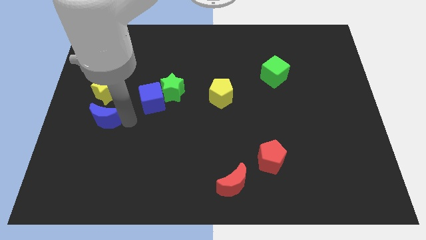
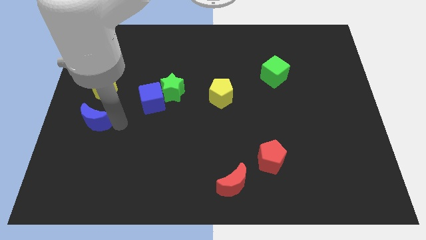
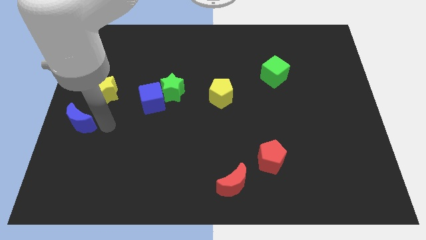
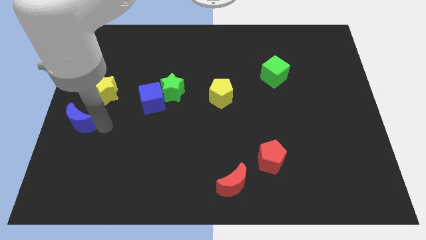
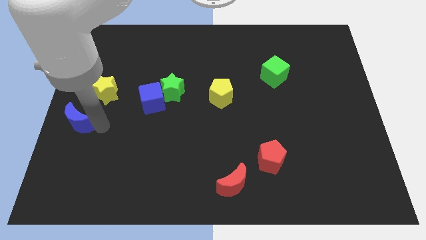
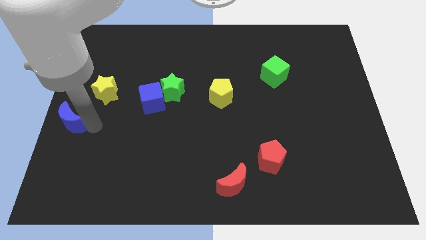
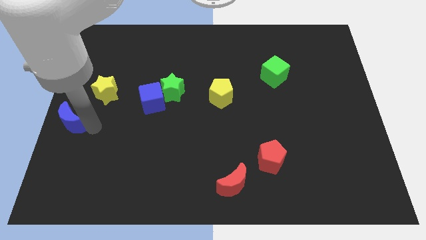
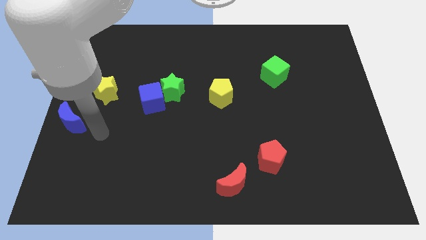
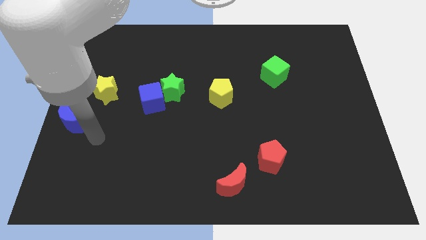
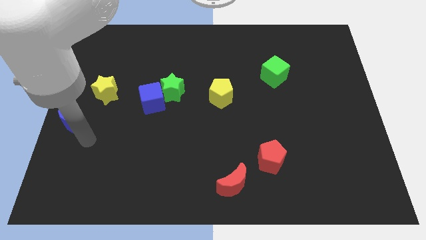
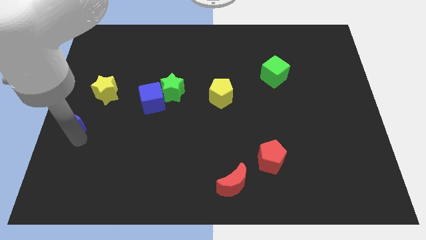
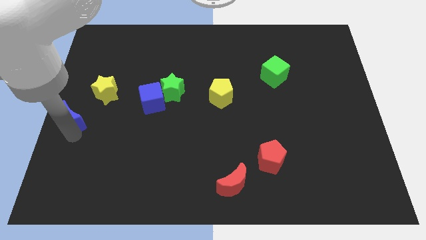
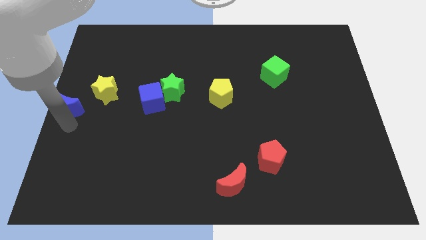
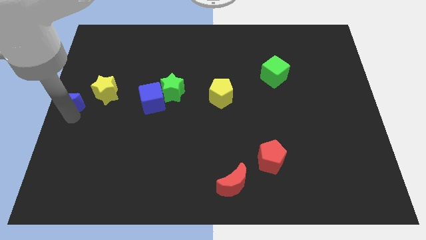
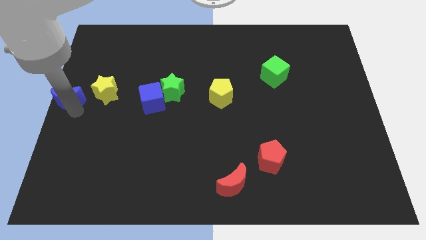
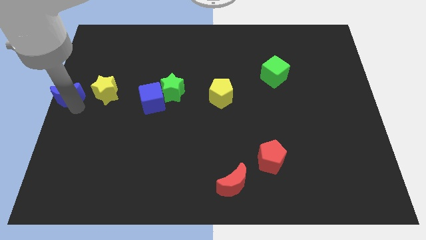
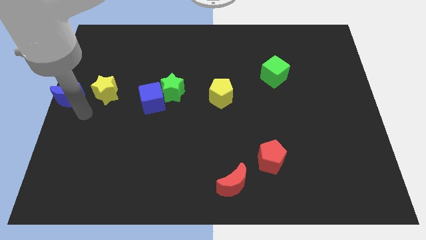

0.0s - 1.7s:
place the blue moon to the left side of the yellow star

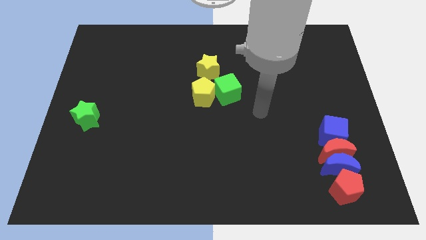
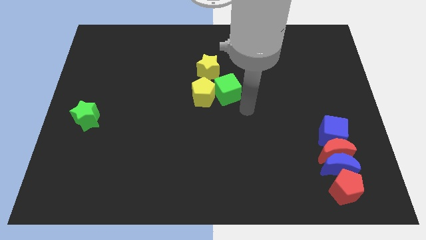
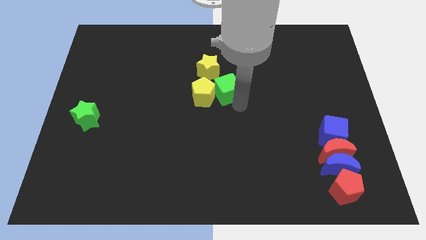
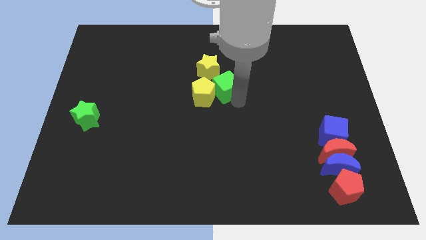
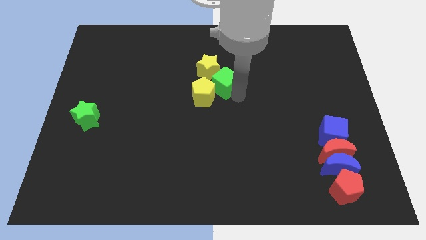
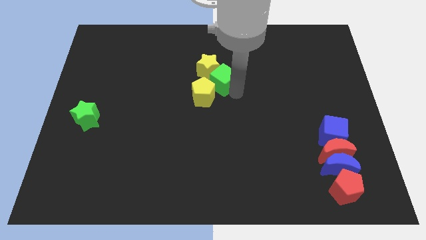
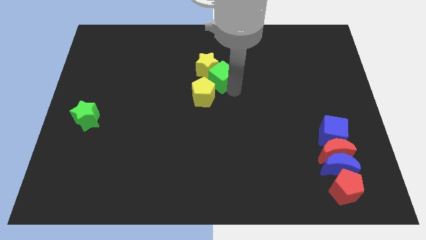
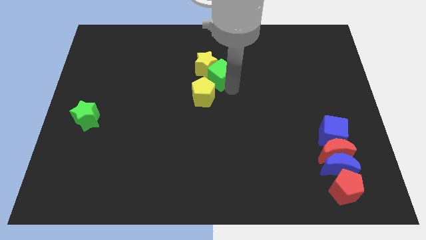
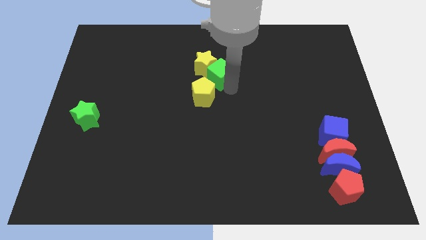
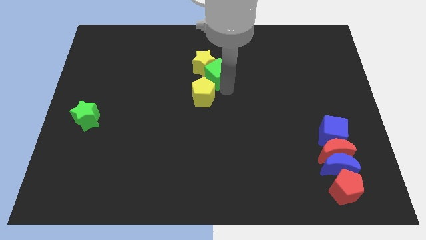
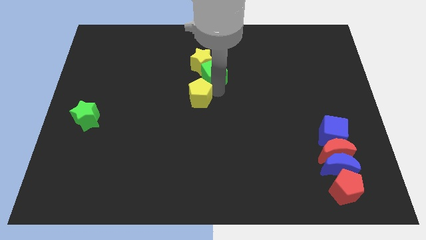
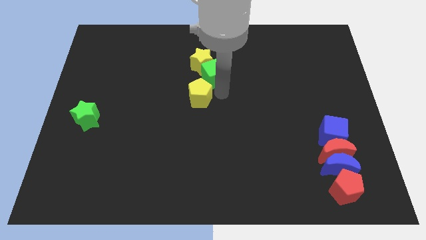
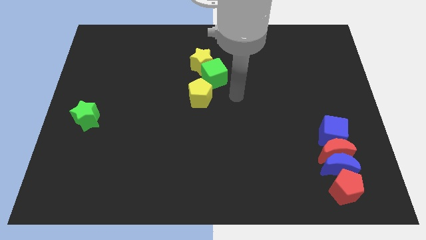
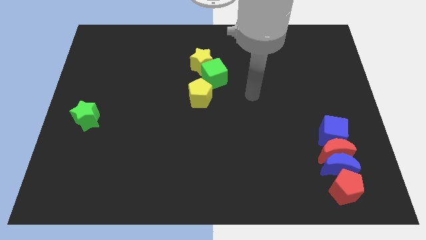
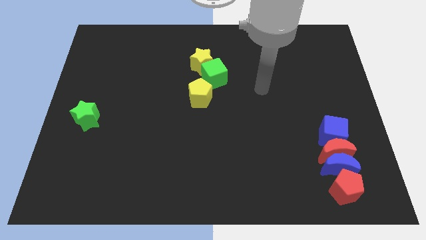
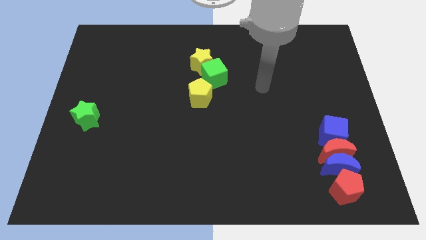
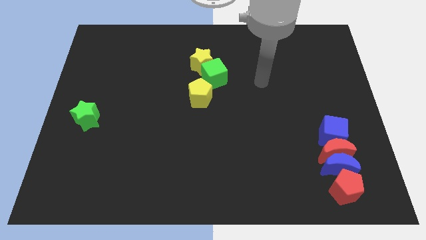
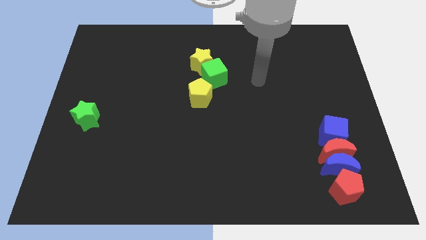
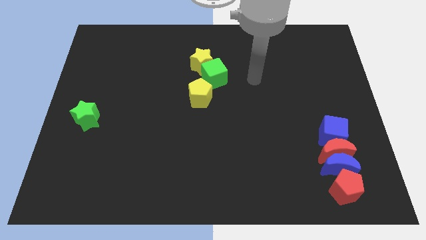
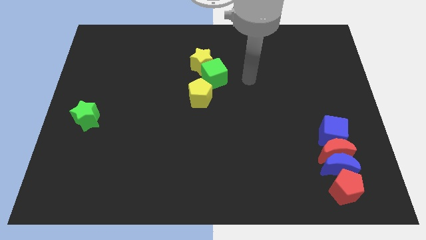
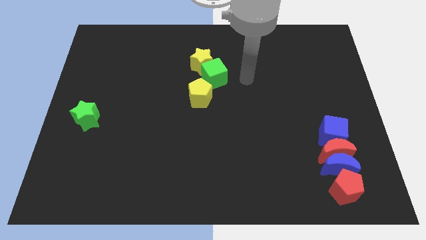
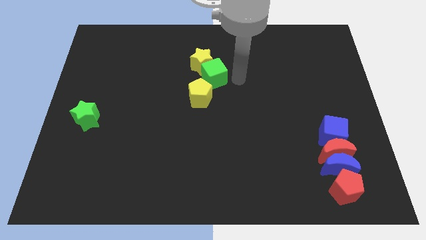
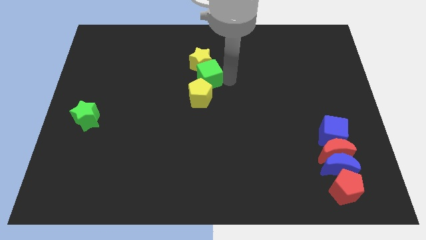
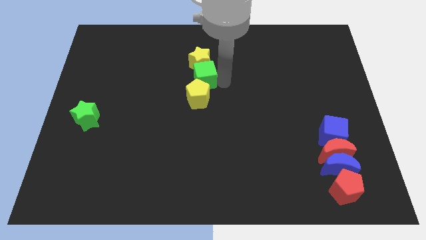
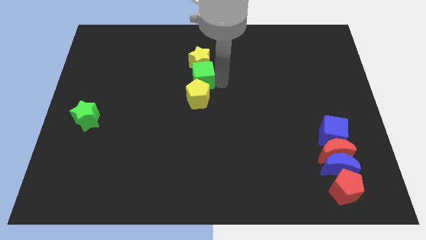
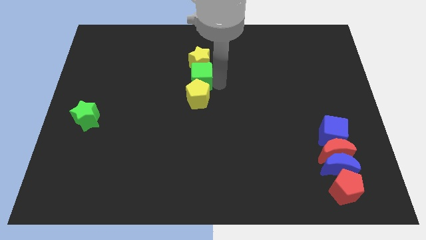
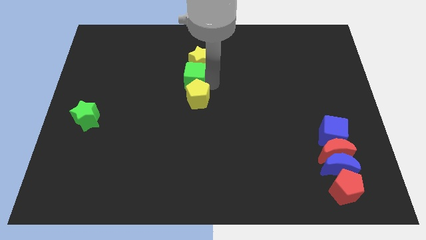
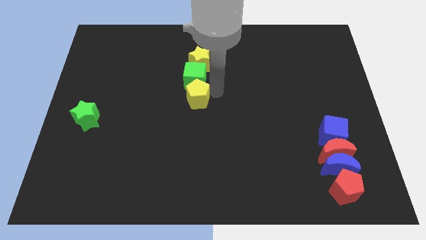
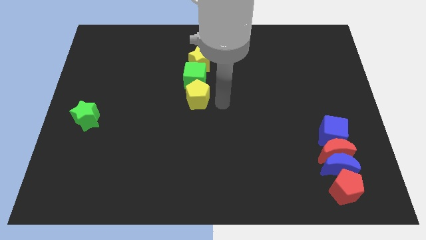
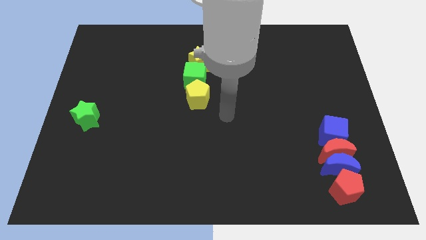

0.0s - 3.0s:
place green cube in between yellow blocks

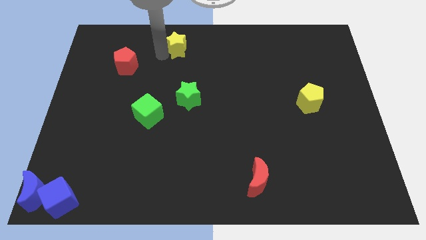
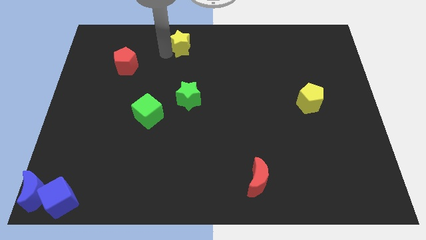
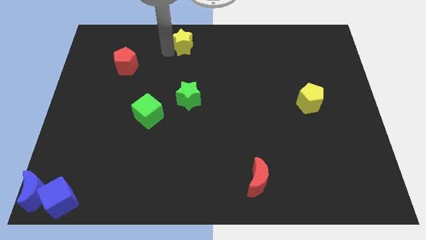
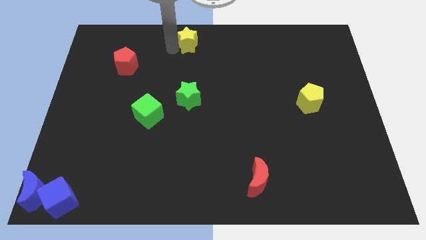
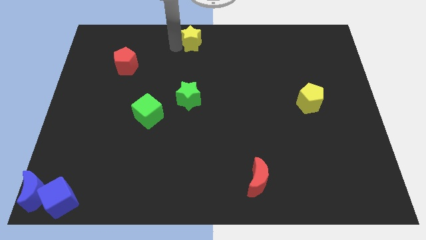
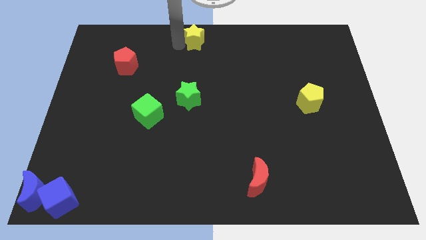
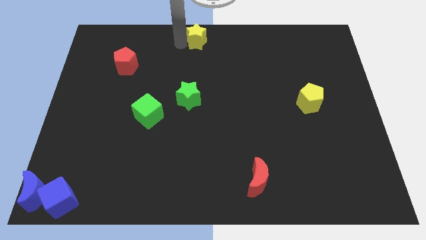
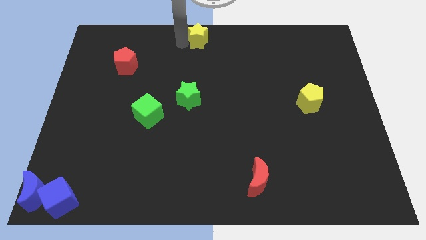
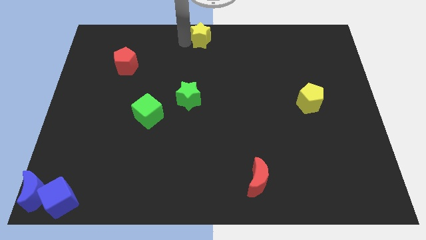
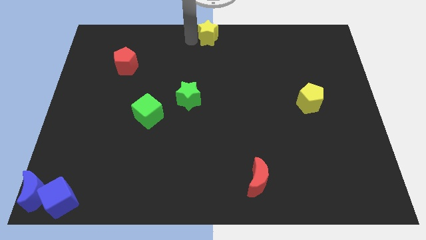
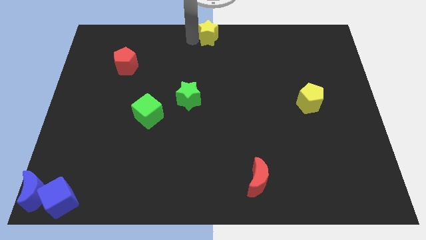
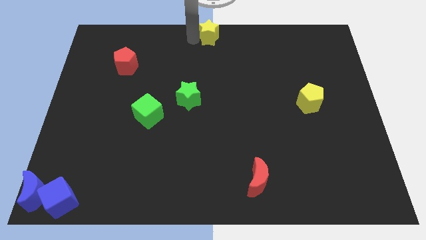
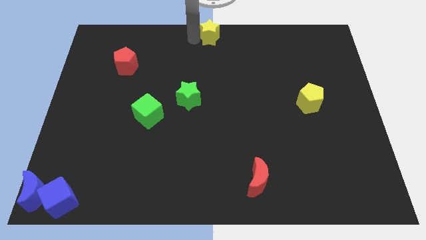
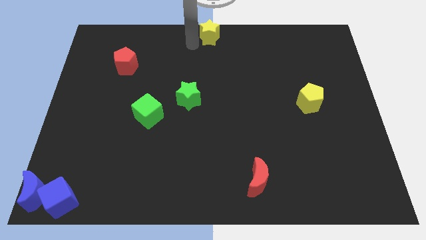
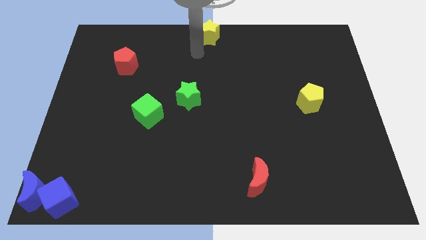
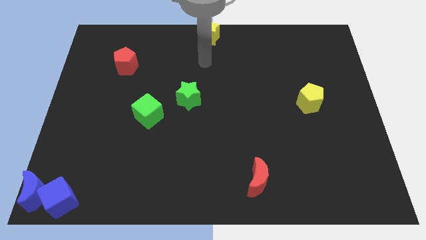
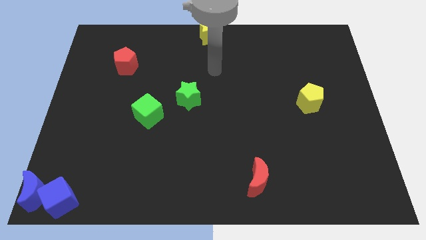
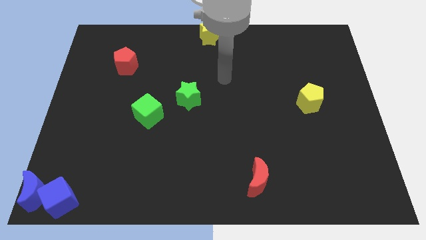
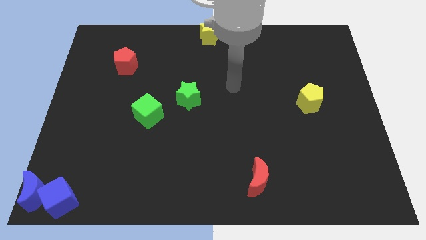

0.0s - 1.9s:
move the yellow star towards the top center of the board

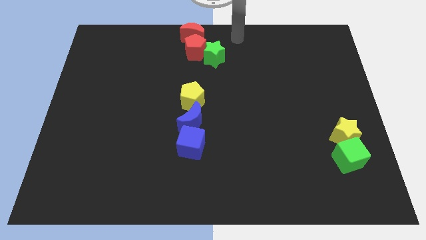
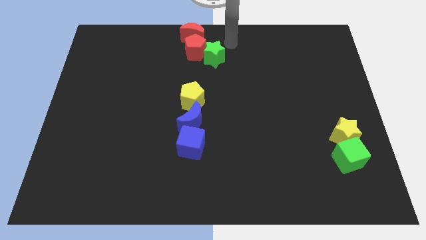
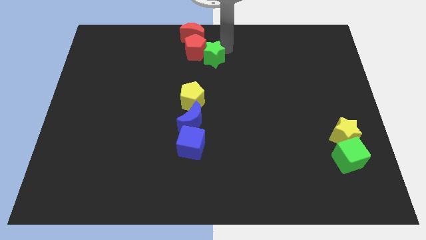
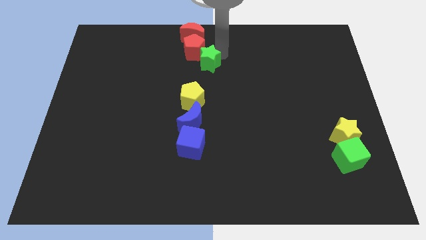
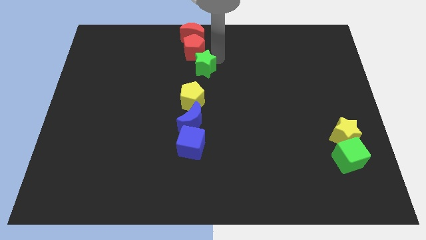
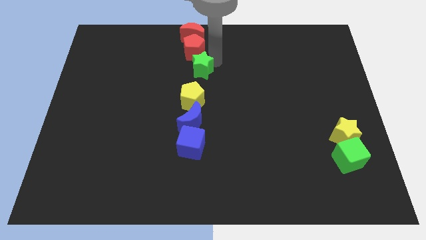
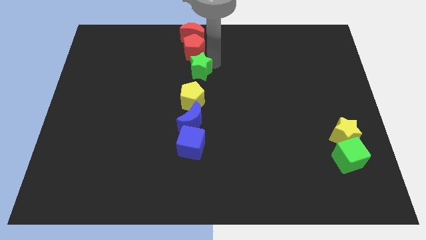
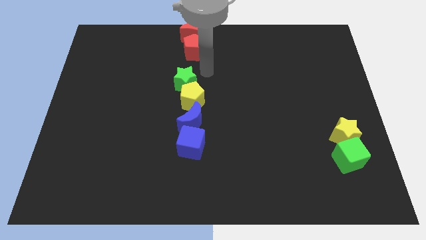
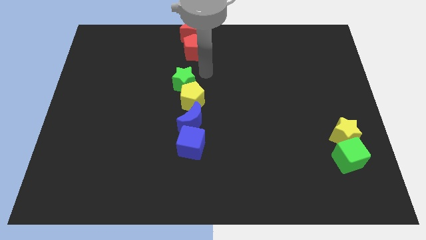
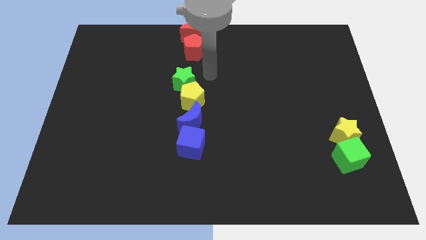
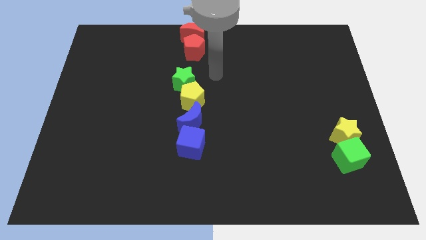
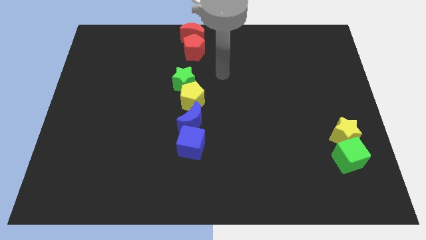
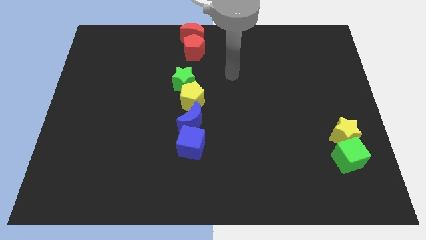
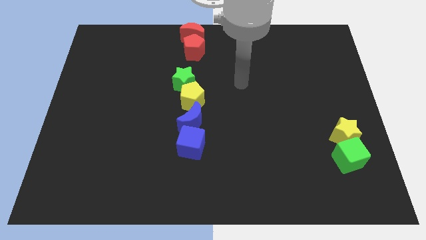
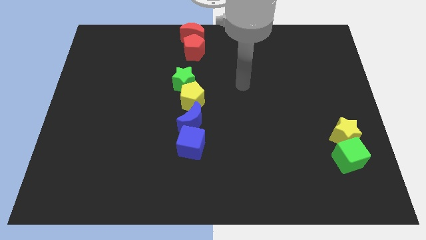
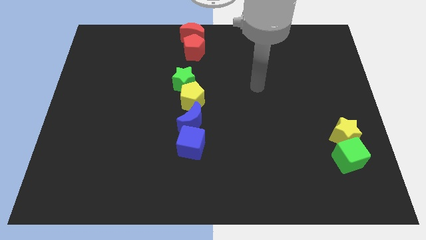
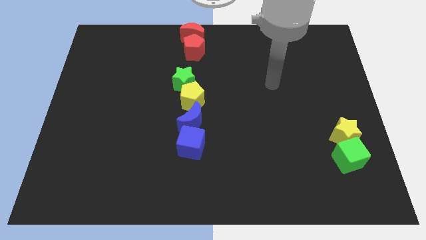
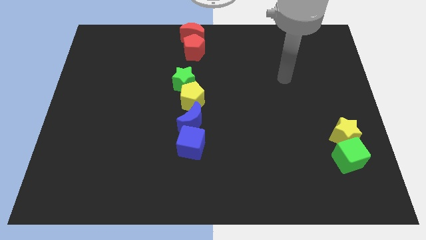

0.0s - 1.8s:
place the green star above the yellow pentagon

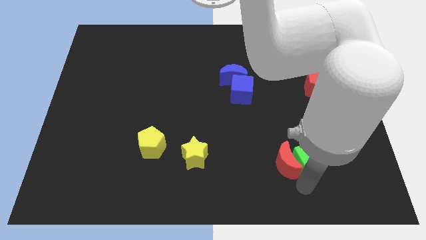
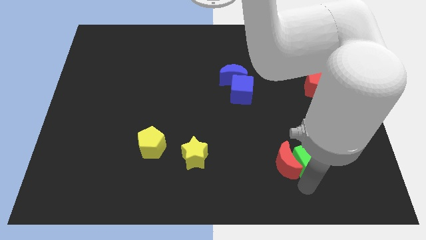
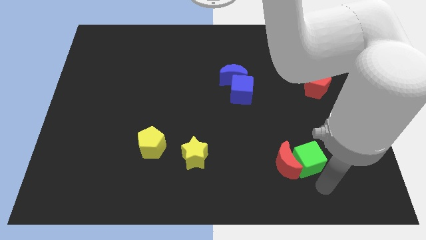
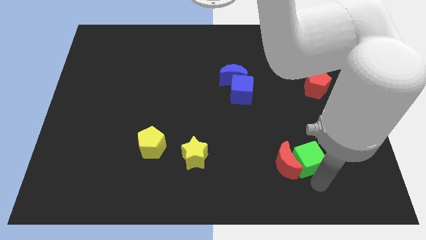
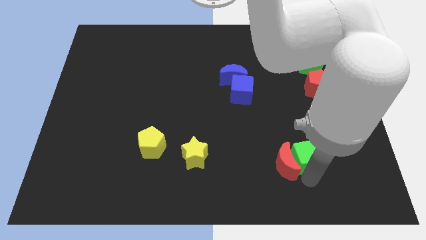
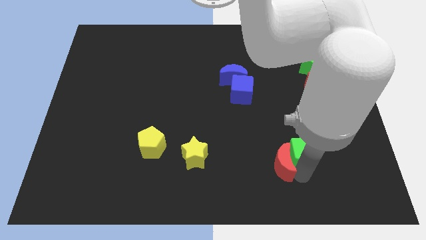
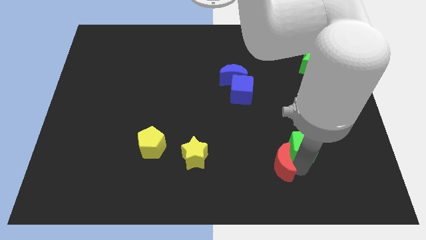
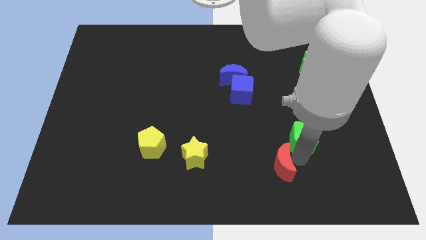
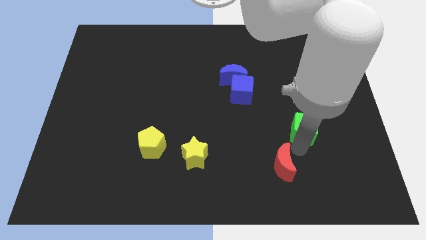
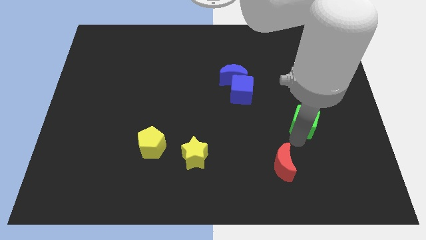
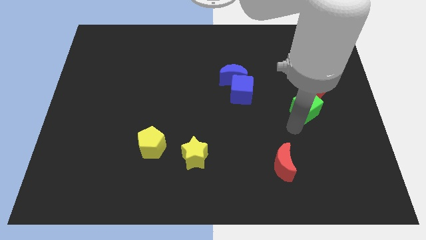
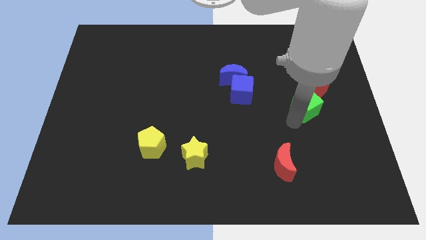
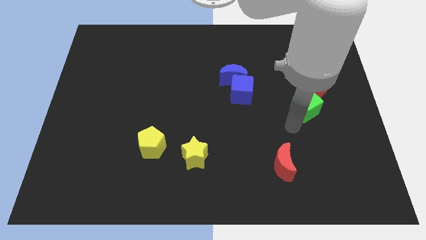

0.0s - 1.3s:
separate the green cube from the red moon
